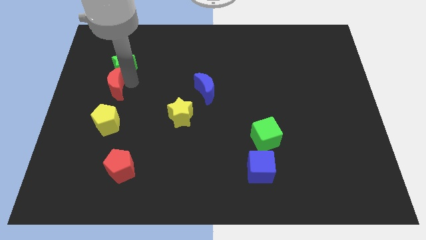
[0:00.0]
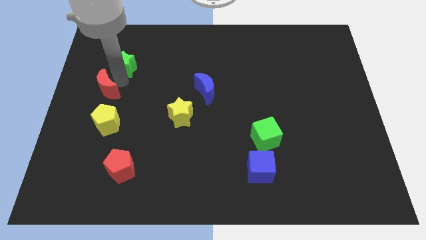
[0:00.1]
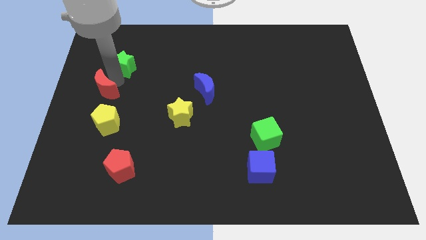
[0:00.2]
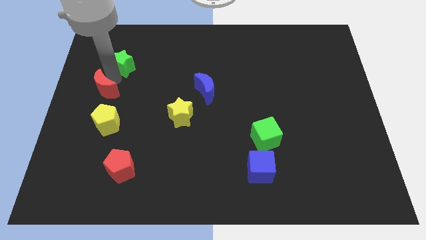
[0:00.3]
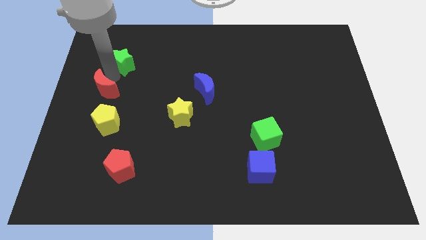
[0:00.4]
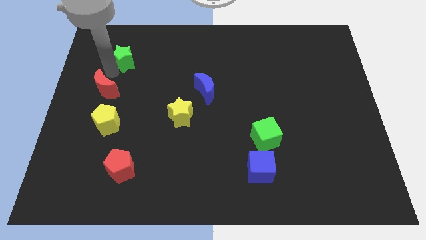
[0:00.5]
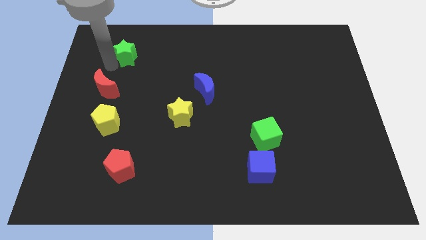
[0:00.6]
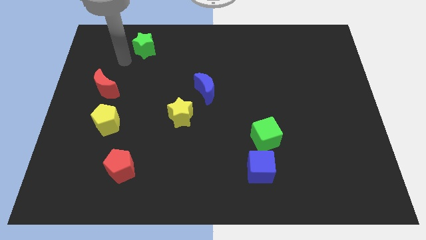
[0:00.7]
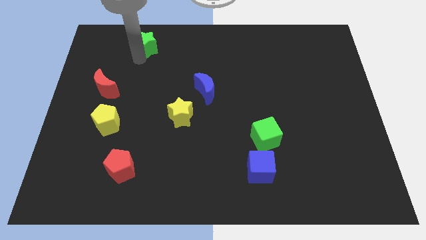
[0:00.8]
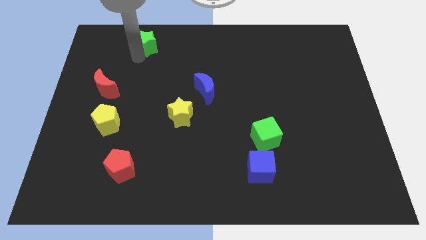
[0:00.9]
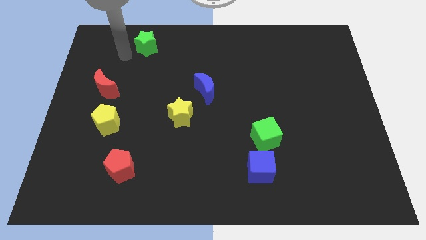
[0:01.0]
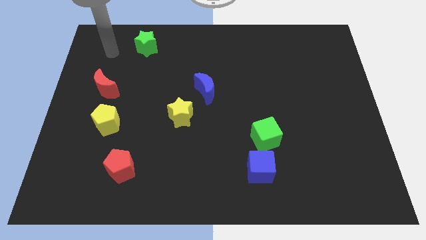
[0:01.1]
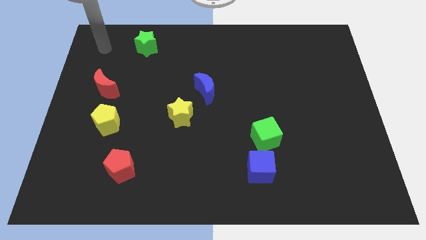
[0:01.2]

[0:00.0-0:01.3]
move the green star away from the red crescent

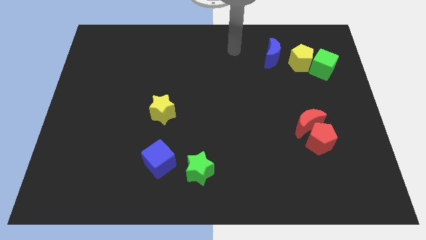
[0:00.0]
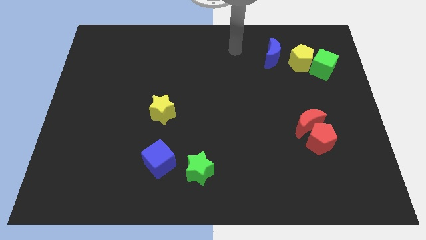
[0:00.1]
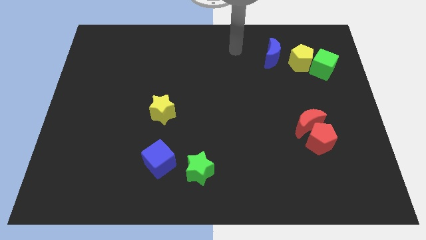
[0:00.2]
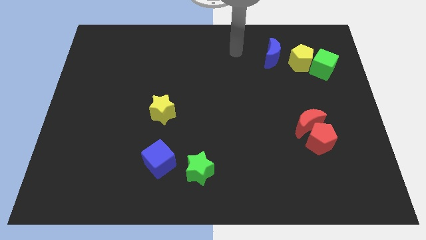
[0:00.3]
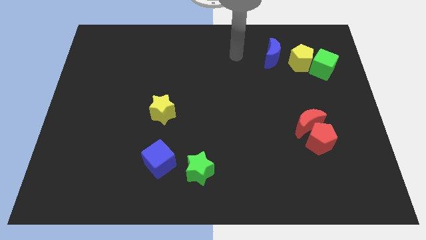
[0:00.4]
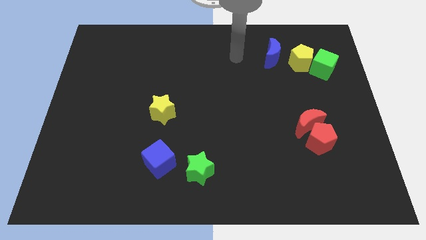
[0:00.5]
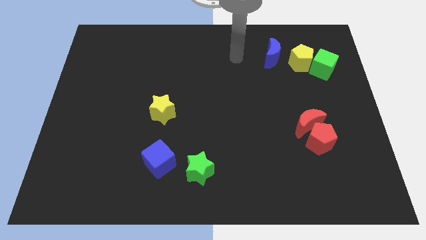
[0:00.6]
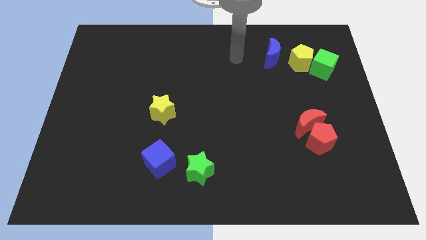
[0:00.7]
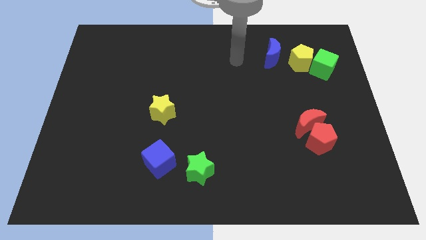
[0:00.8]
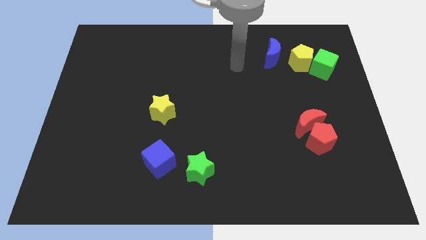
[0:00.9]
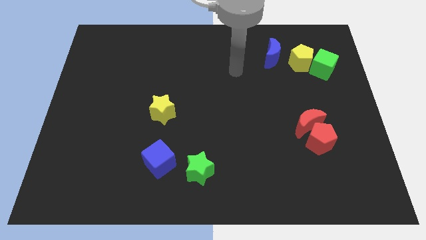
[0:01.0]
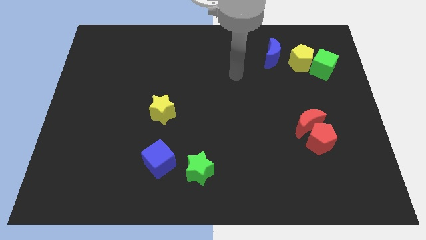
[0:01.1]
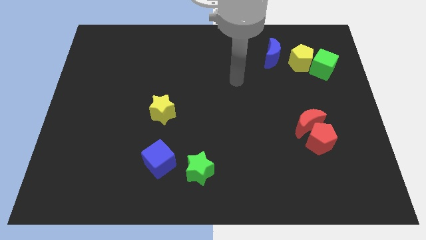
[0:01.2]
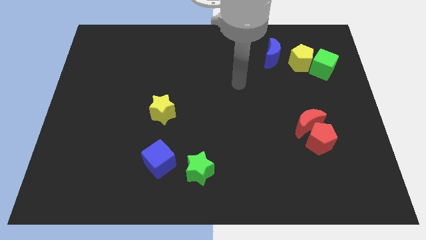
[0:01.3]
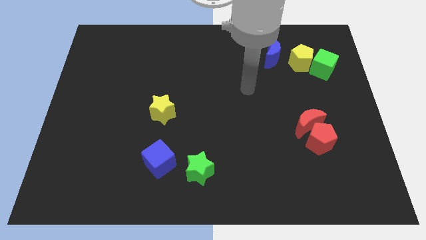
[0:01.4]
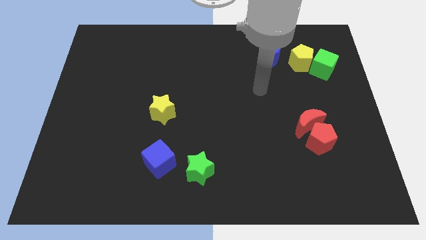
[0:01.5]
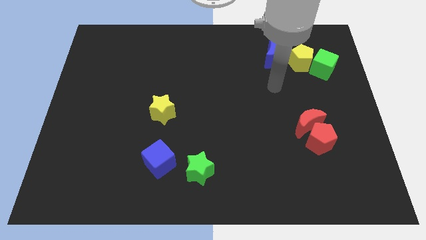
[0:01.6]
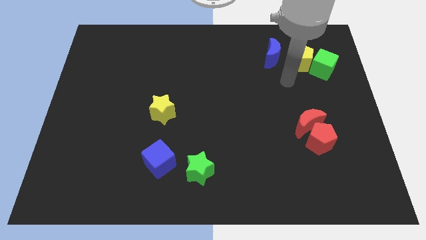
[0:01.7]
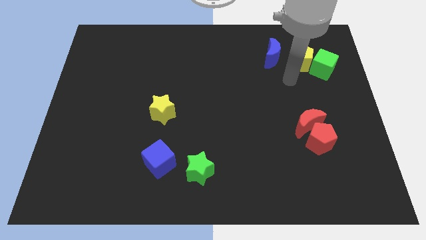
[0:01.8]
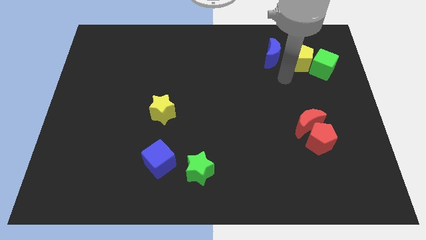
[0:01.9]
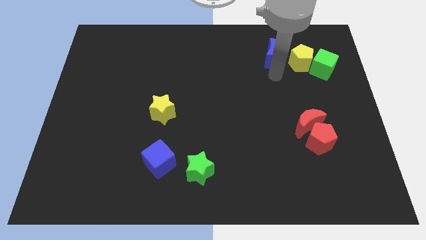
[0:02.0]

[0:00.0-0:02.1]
move your arm towards the blue crescent

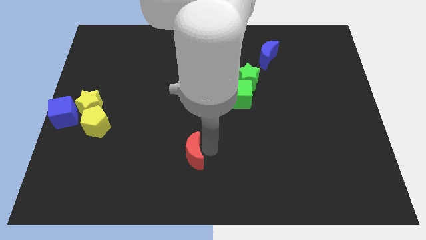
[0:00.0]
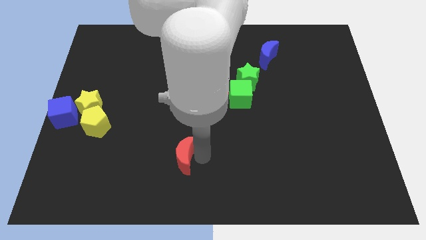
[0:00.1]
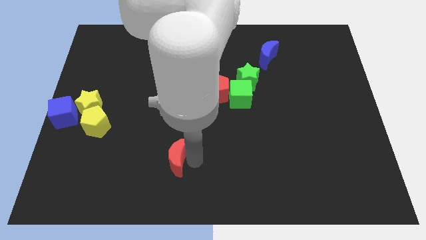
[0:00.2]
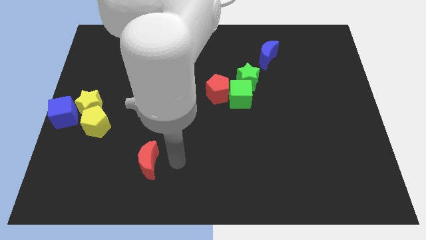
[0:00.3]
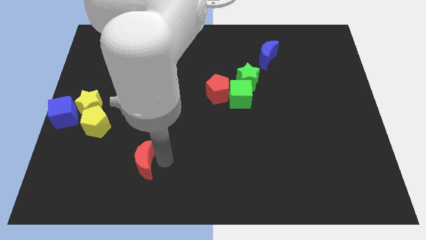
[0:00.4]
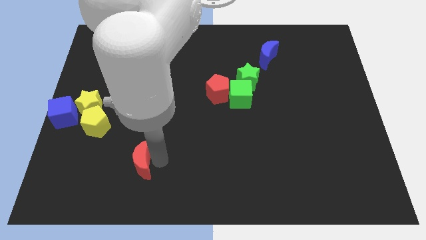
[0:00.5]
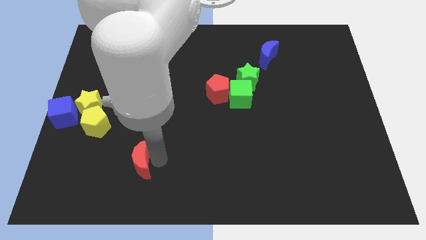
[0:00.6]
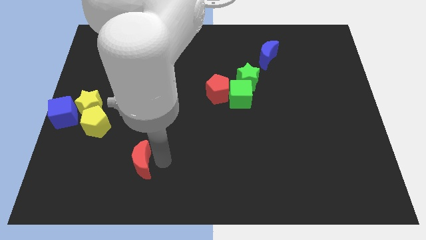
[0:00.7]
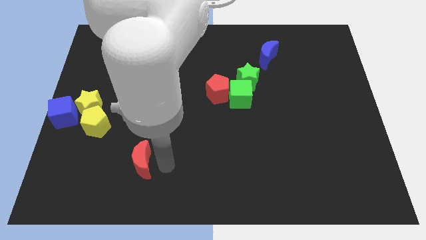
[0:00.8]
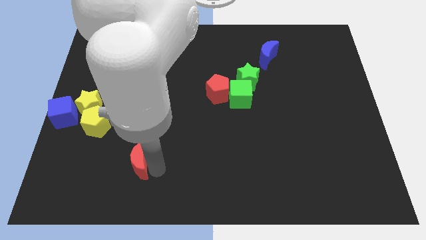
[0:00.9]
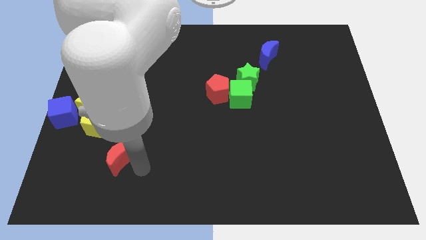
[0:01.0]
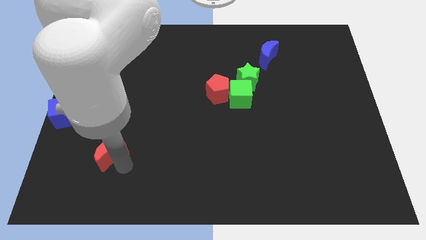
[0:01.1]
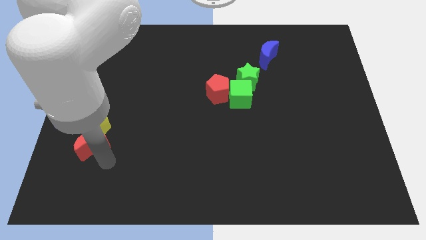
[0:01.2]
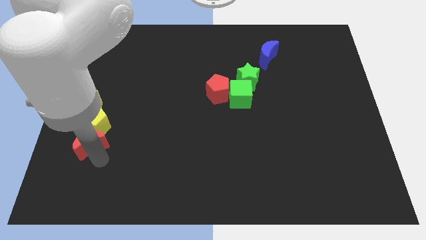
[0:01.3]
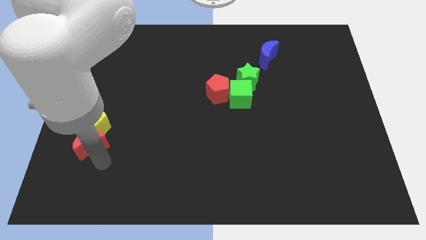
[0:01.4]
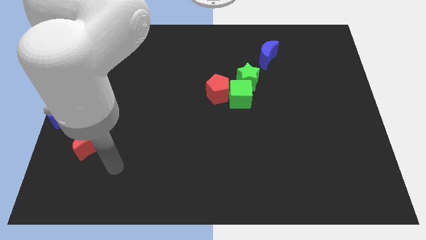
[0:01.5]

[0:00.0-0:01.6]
push the red crescent below to the yellow pentagon

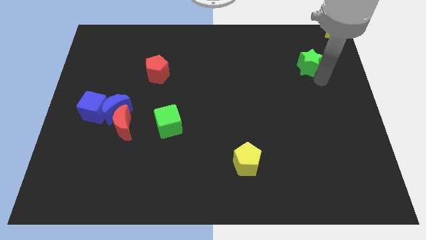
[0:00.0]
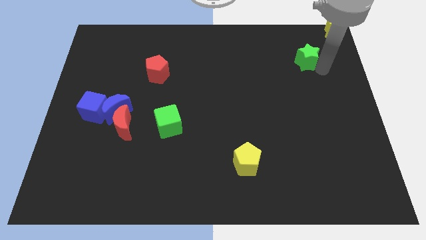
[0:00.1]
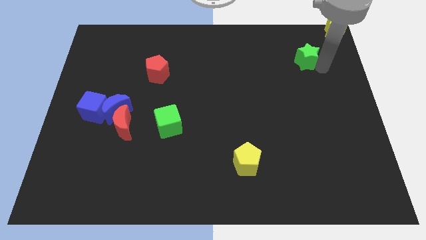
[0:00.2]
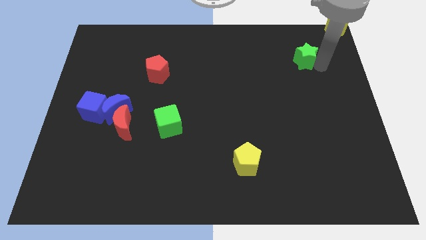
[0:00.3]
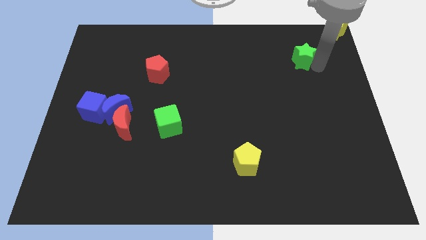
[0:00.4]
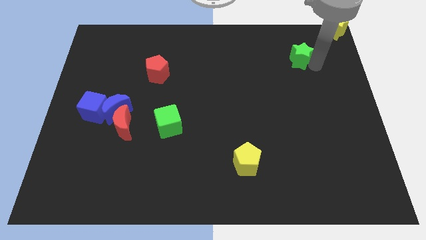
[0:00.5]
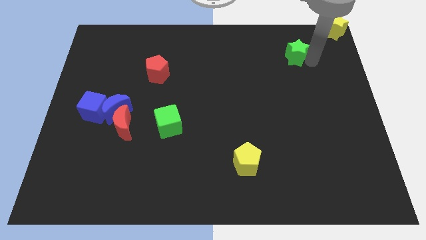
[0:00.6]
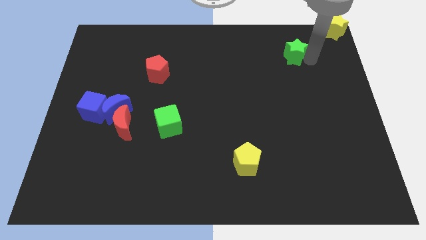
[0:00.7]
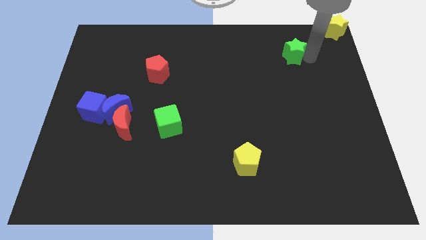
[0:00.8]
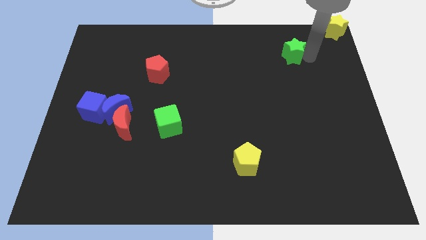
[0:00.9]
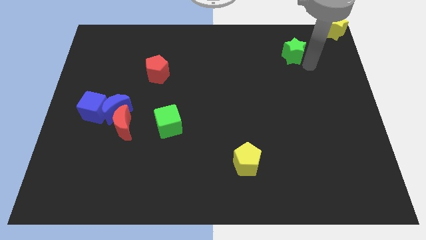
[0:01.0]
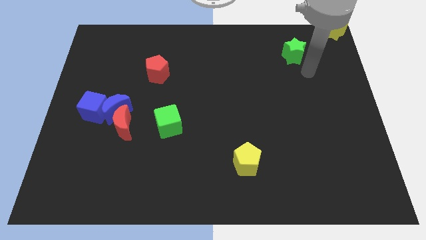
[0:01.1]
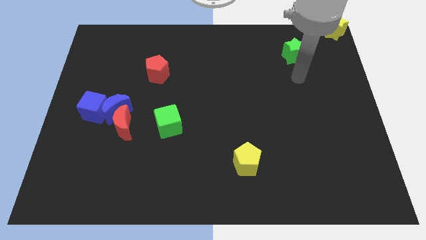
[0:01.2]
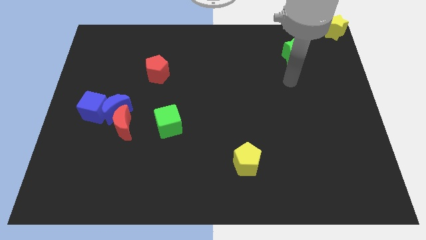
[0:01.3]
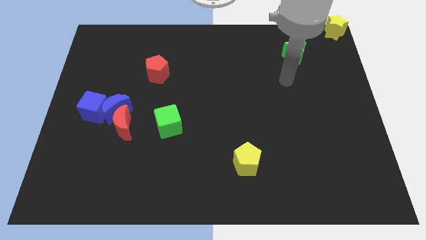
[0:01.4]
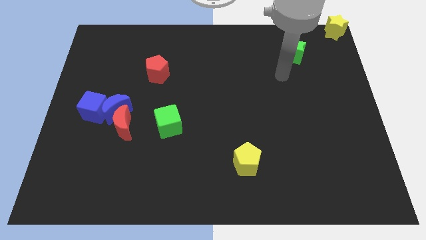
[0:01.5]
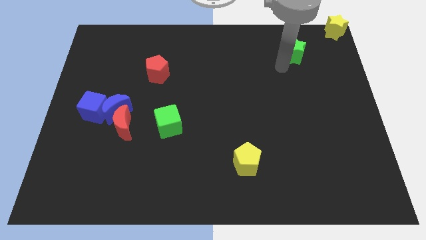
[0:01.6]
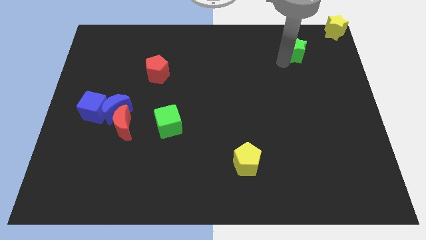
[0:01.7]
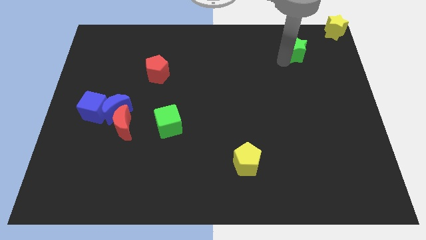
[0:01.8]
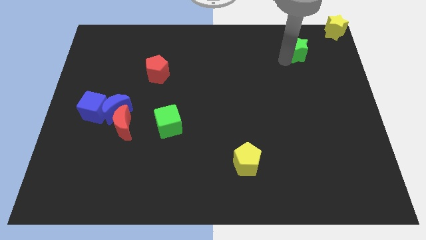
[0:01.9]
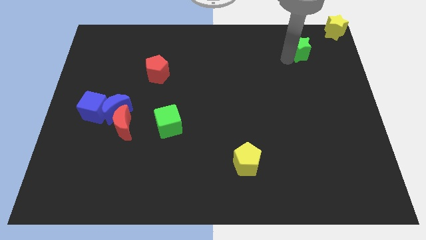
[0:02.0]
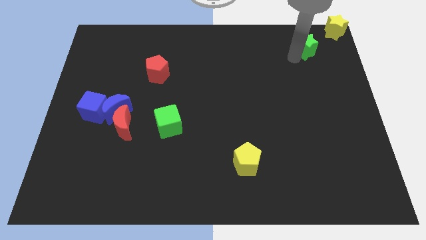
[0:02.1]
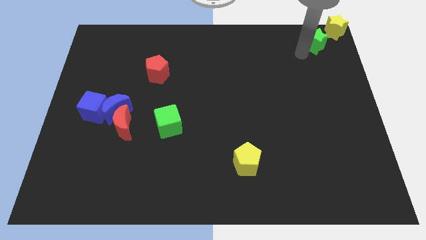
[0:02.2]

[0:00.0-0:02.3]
push the green star diagonal to the left bottom of the yellow star

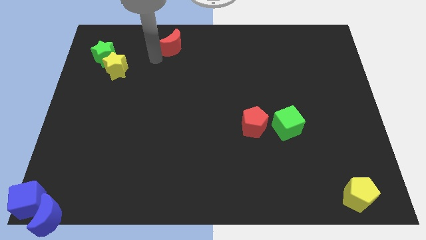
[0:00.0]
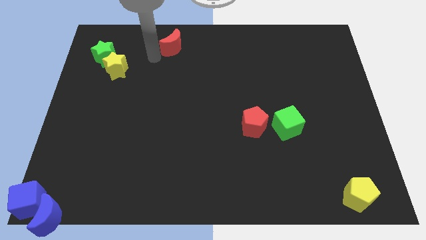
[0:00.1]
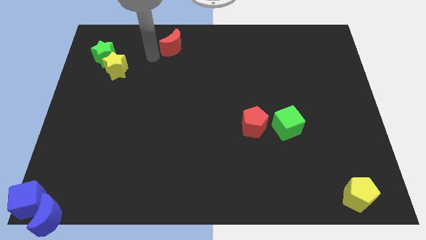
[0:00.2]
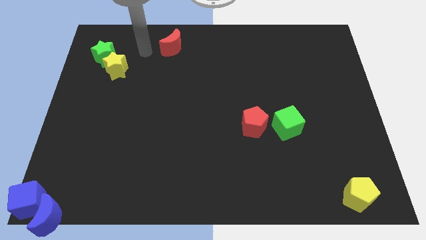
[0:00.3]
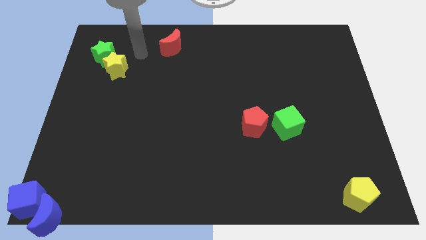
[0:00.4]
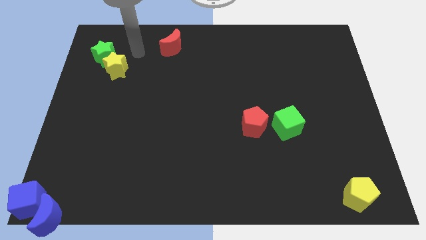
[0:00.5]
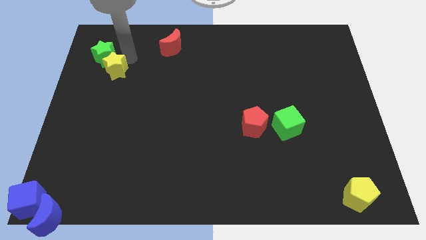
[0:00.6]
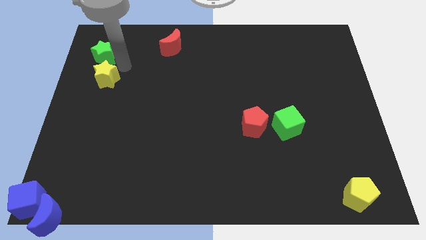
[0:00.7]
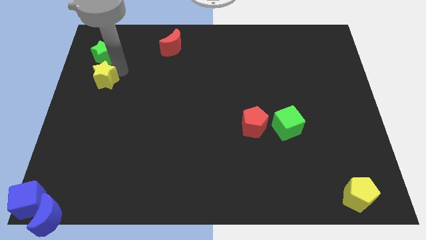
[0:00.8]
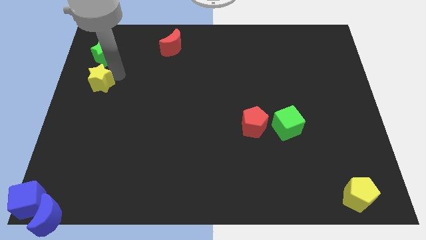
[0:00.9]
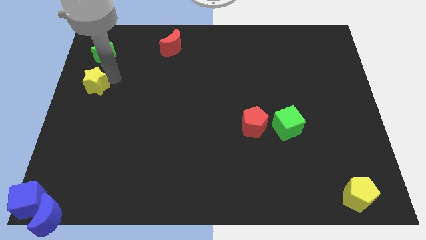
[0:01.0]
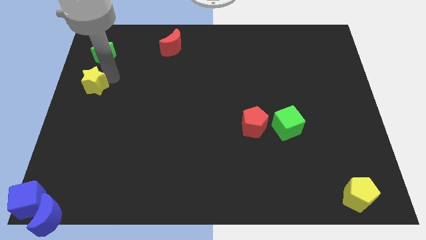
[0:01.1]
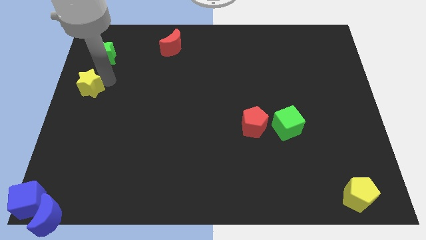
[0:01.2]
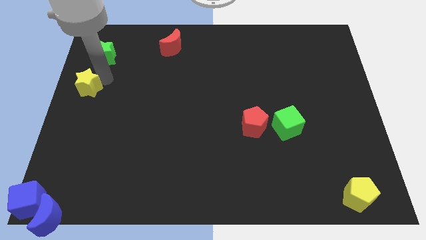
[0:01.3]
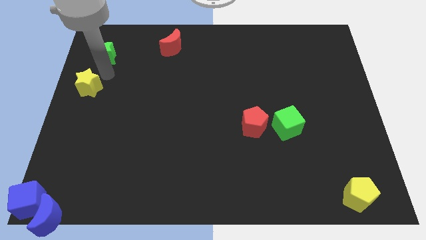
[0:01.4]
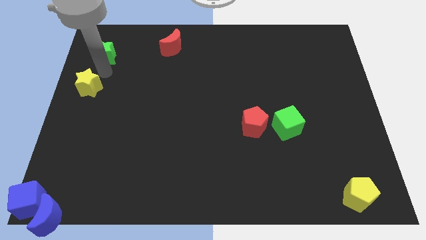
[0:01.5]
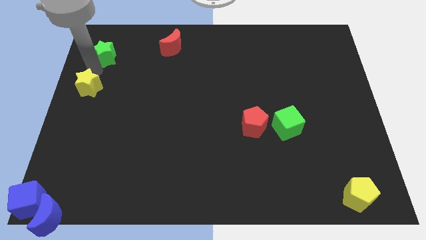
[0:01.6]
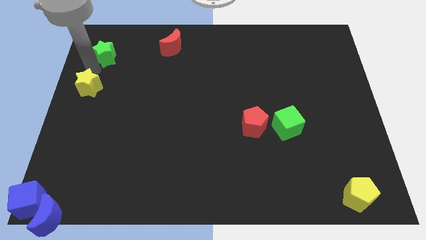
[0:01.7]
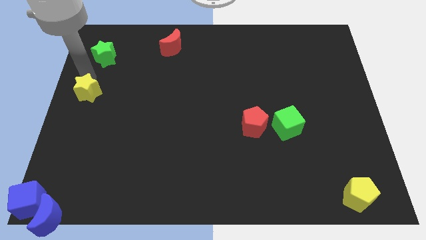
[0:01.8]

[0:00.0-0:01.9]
move your arm away from the red moon
